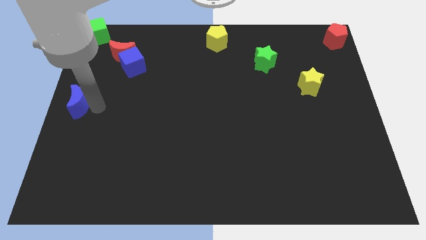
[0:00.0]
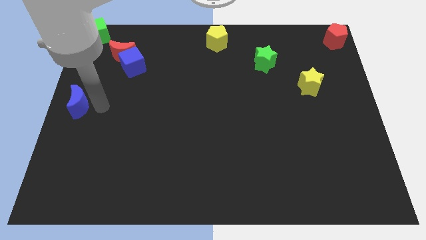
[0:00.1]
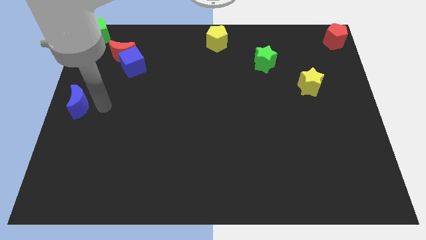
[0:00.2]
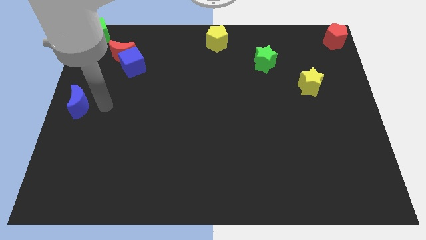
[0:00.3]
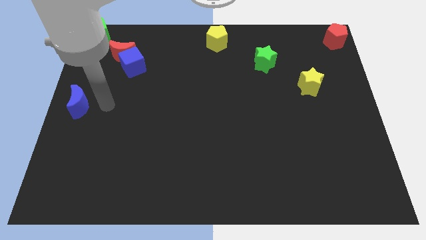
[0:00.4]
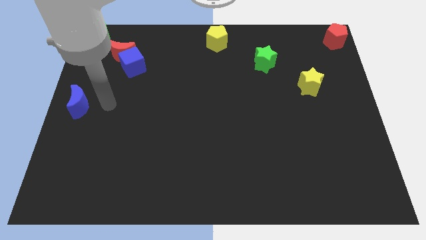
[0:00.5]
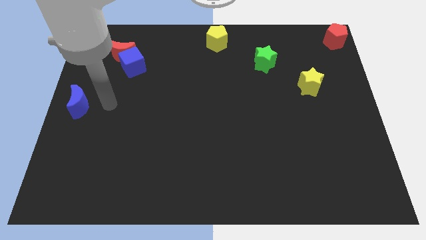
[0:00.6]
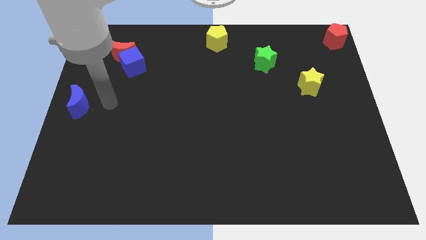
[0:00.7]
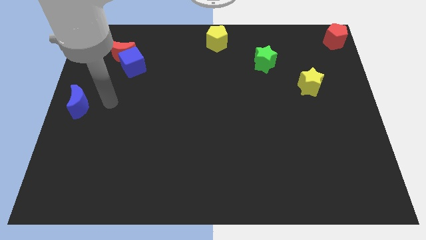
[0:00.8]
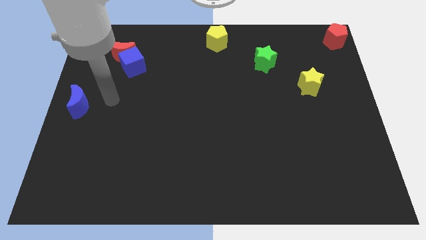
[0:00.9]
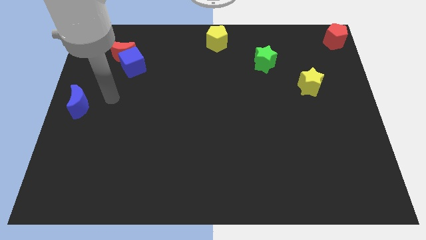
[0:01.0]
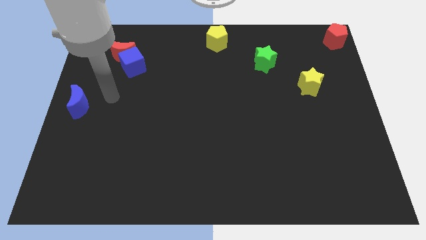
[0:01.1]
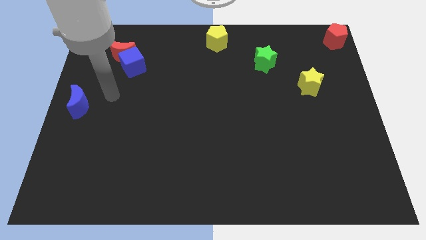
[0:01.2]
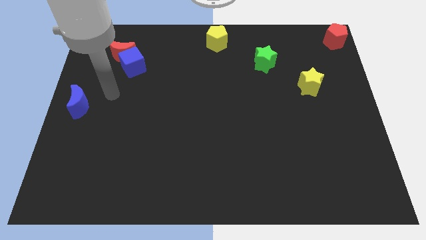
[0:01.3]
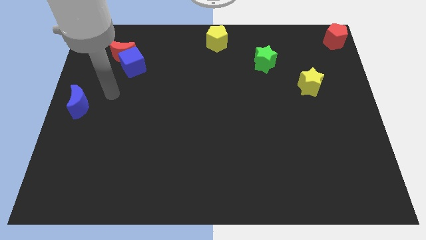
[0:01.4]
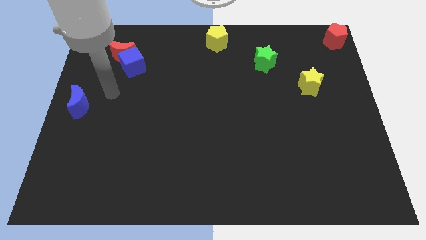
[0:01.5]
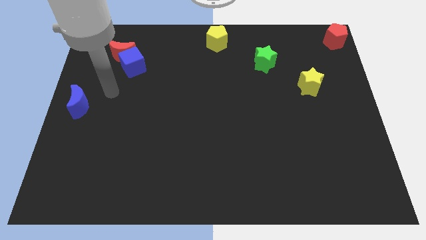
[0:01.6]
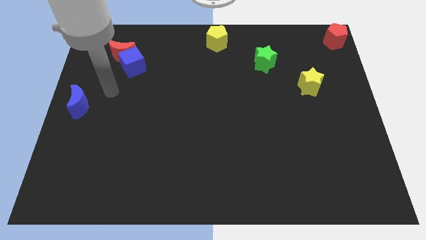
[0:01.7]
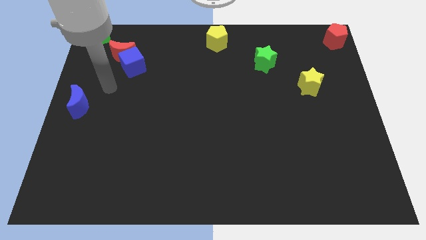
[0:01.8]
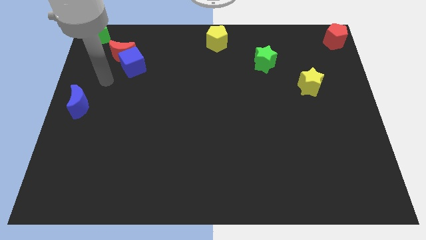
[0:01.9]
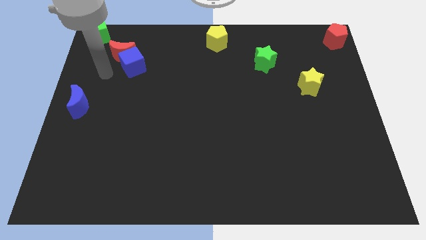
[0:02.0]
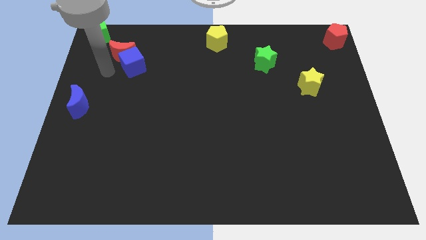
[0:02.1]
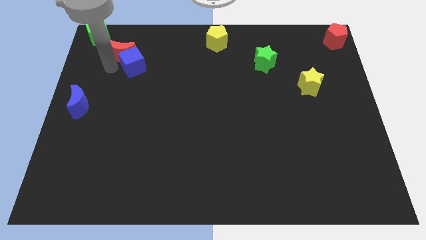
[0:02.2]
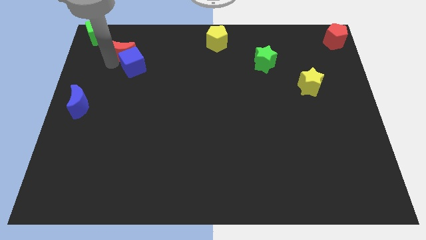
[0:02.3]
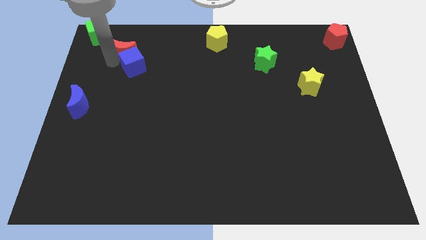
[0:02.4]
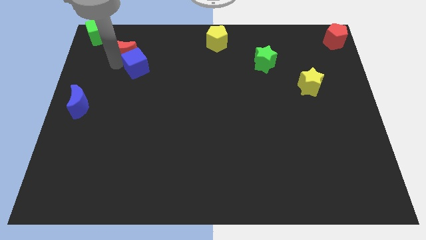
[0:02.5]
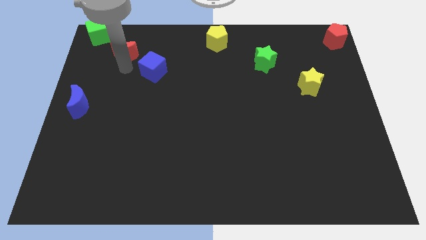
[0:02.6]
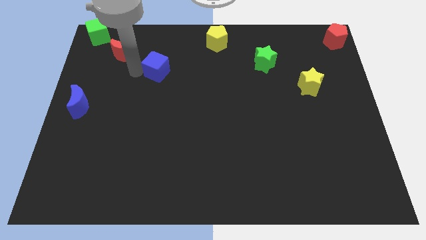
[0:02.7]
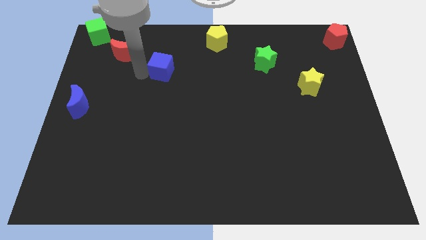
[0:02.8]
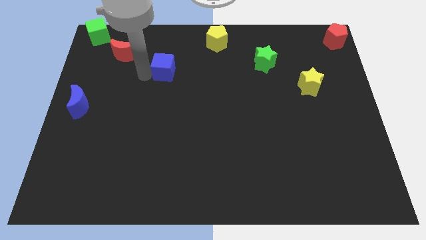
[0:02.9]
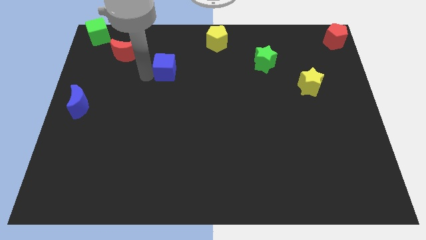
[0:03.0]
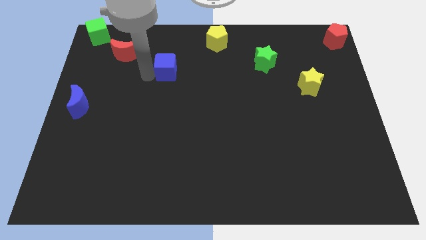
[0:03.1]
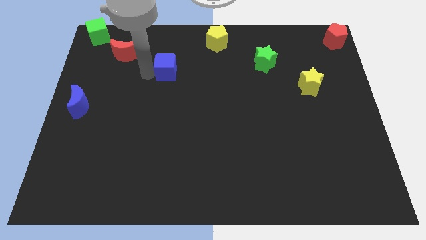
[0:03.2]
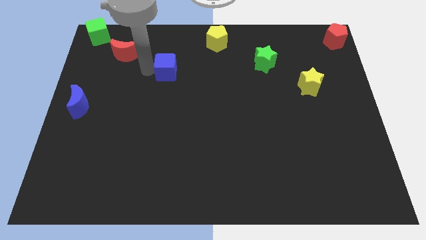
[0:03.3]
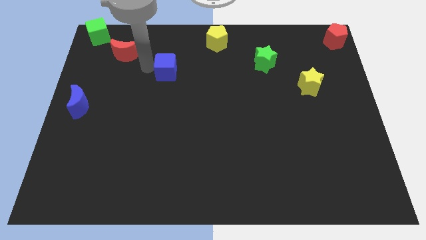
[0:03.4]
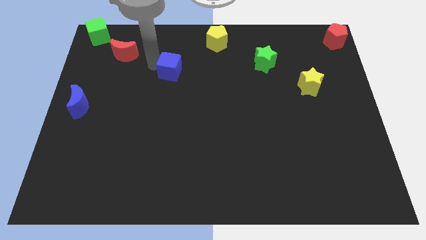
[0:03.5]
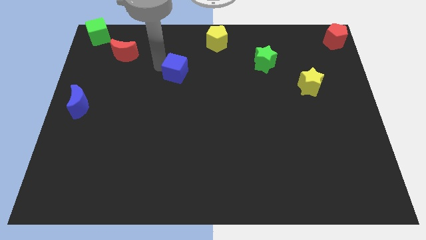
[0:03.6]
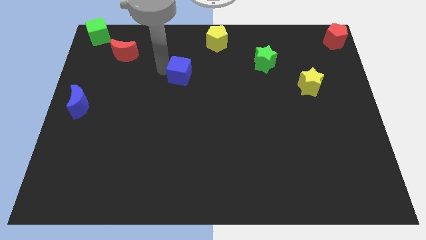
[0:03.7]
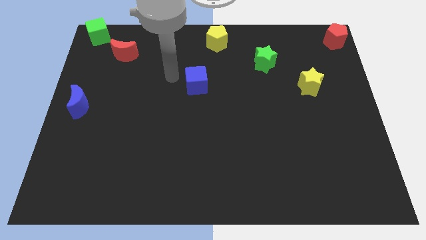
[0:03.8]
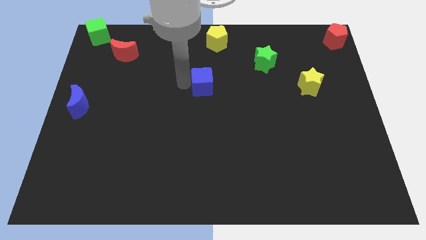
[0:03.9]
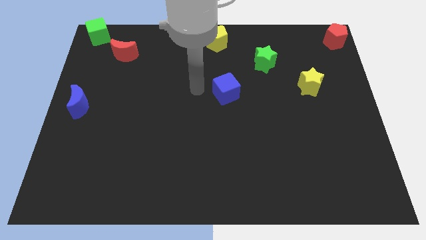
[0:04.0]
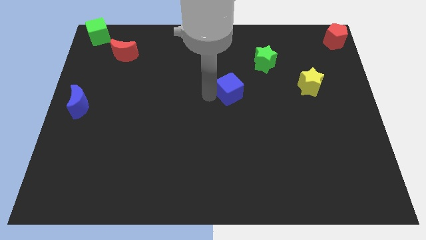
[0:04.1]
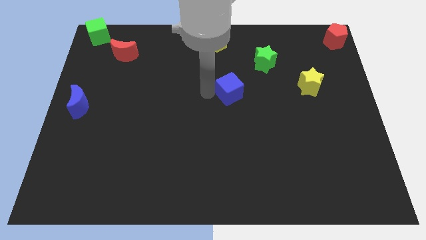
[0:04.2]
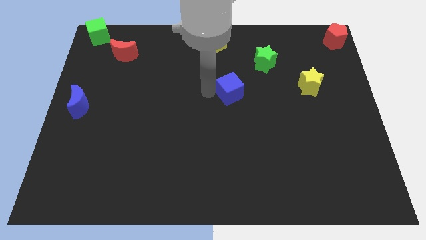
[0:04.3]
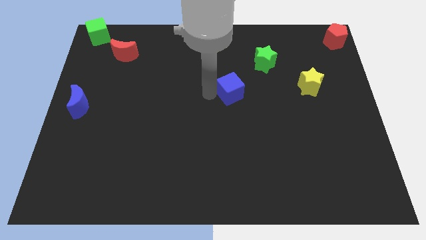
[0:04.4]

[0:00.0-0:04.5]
move the blue cube daigonally to the green star

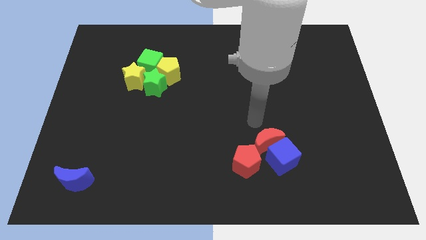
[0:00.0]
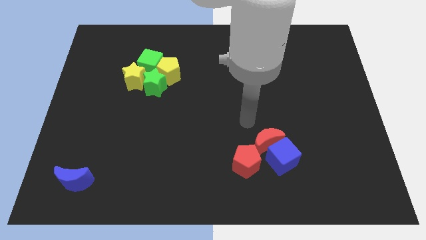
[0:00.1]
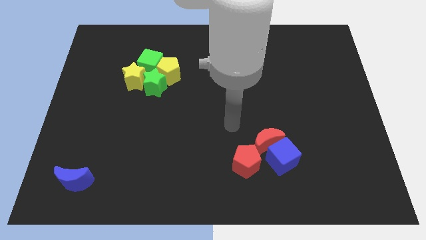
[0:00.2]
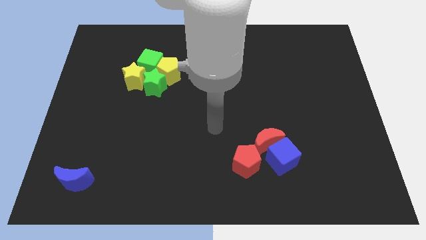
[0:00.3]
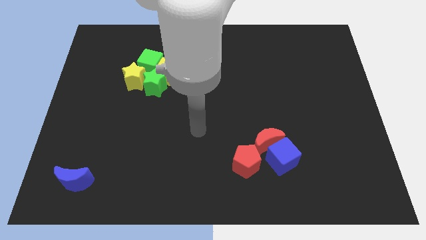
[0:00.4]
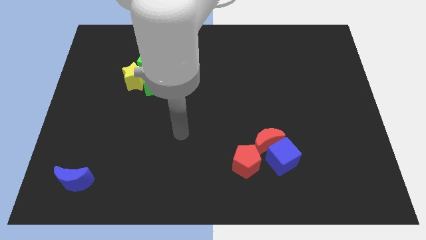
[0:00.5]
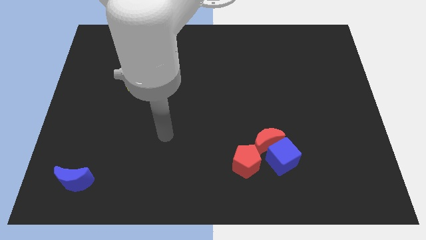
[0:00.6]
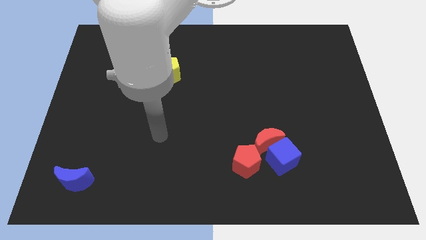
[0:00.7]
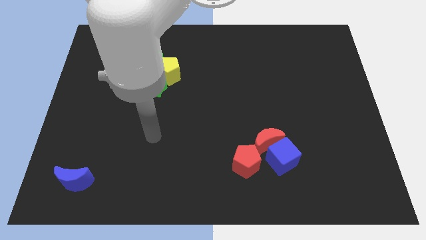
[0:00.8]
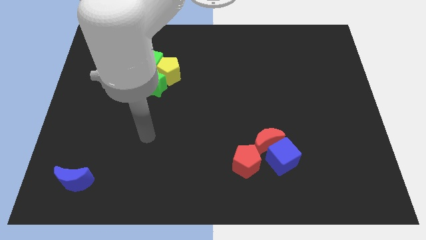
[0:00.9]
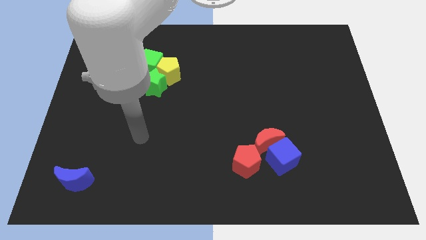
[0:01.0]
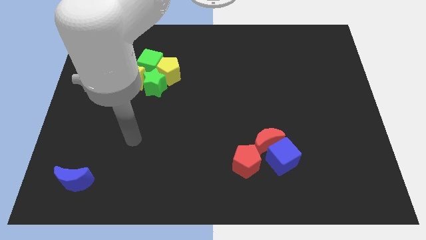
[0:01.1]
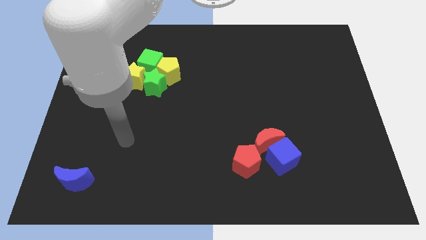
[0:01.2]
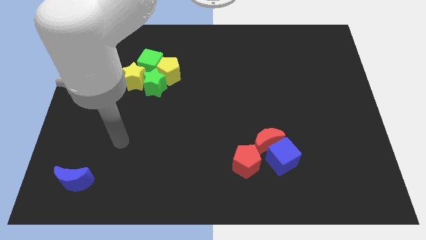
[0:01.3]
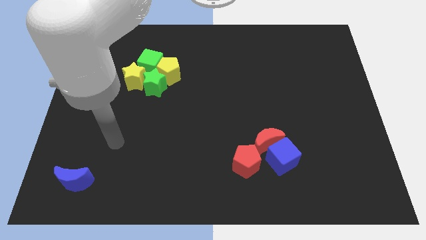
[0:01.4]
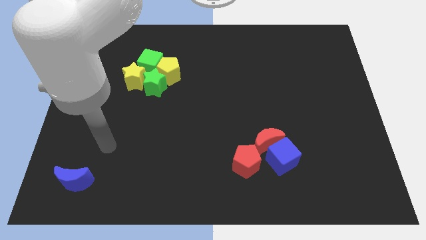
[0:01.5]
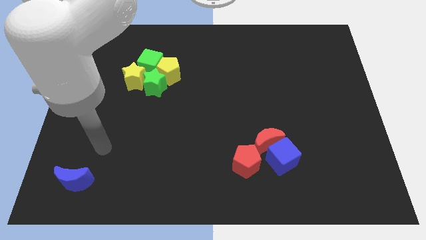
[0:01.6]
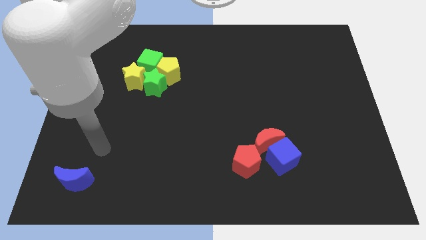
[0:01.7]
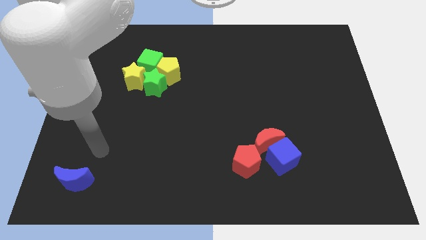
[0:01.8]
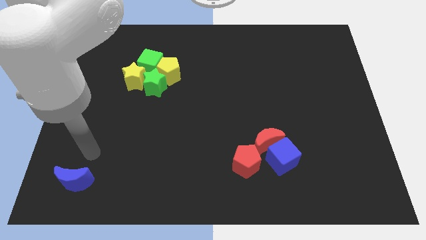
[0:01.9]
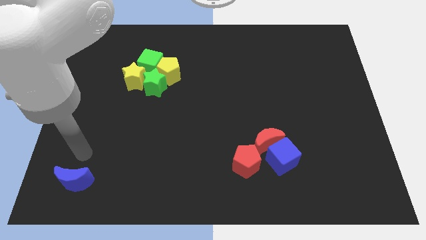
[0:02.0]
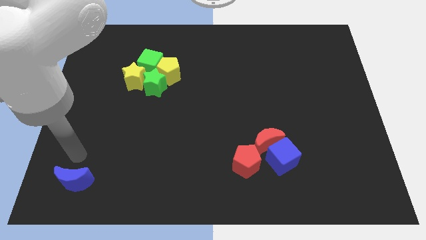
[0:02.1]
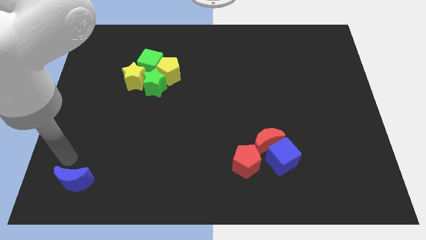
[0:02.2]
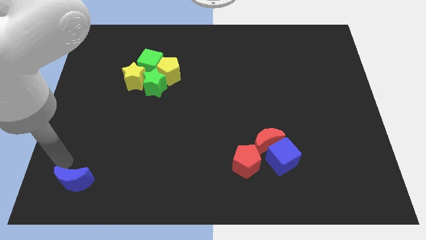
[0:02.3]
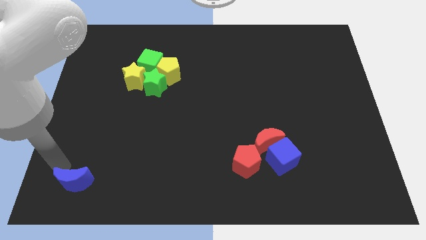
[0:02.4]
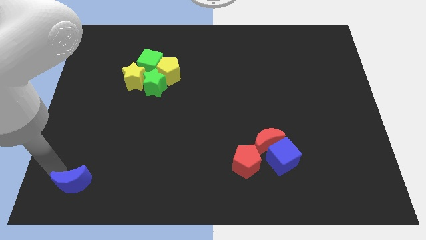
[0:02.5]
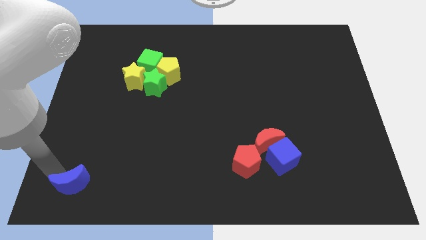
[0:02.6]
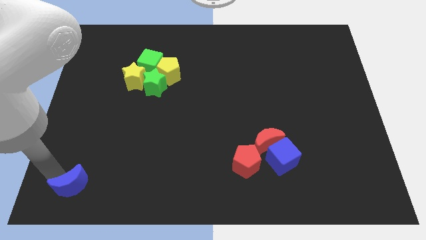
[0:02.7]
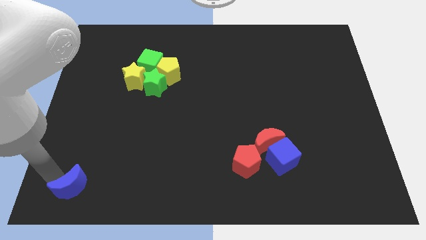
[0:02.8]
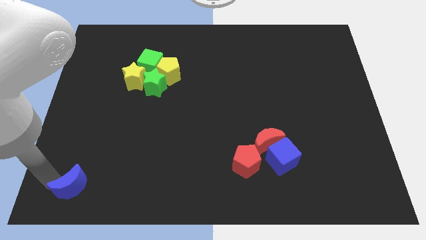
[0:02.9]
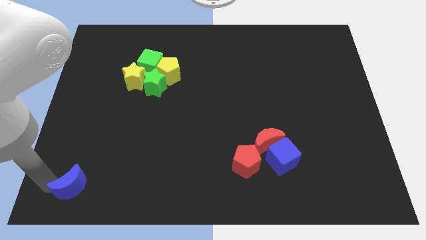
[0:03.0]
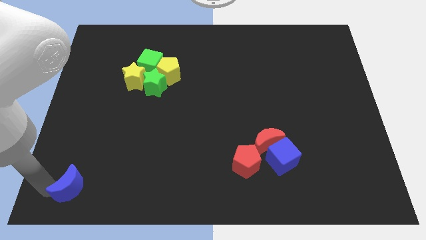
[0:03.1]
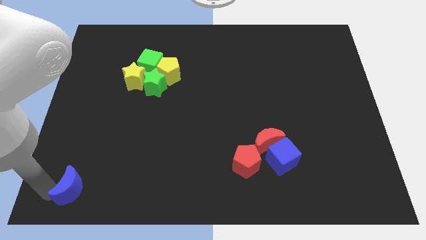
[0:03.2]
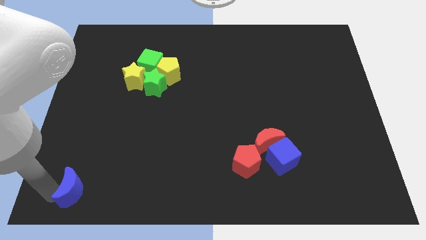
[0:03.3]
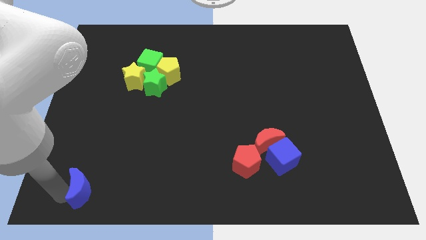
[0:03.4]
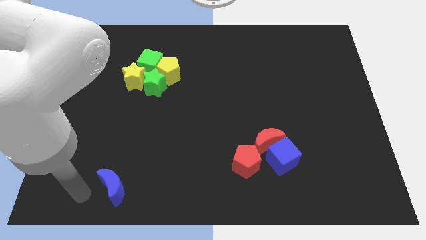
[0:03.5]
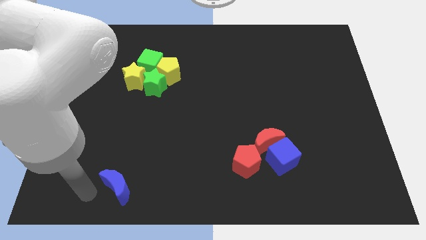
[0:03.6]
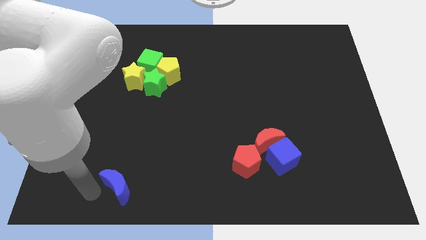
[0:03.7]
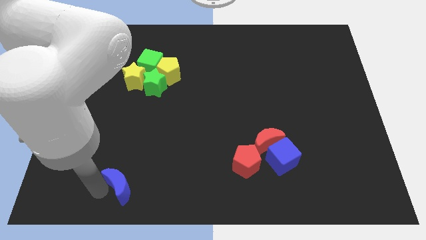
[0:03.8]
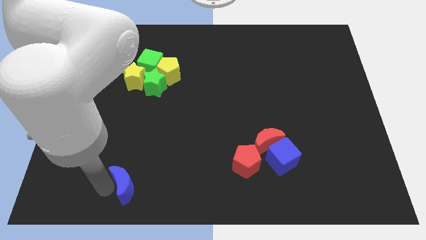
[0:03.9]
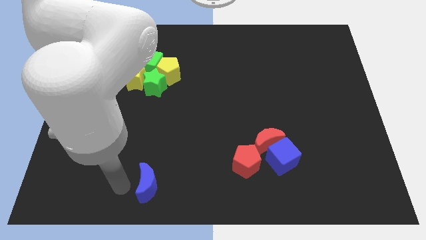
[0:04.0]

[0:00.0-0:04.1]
move the blue moon towards the bottom center

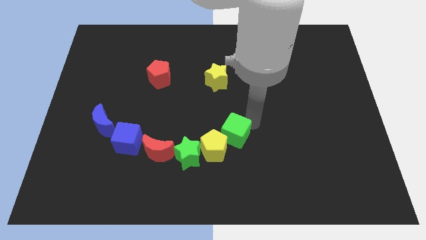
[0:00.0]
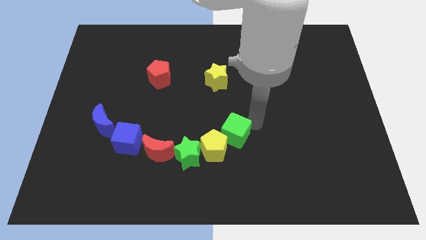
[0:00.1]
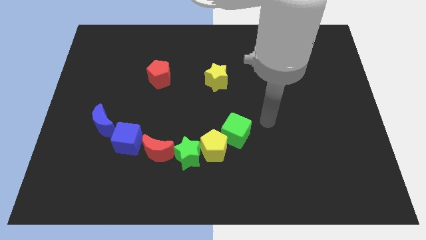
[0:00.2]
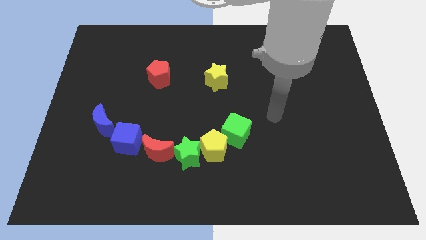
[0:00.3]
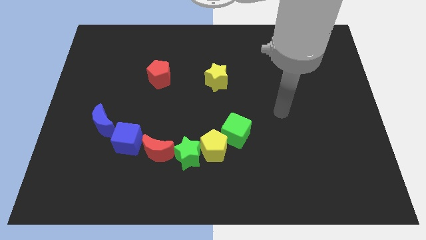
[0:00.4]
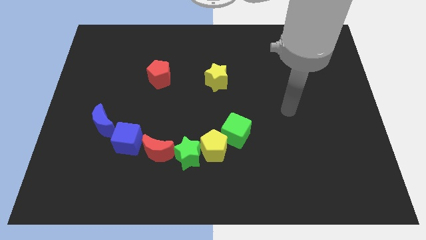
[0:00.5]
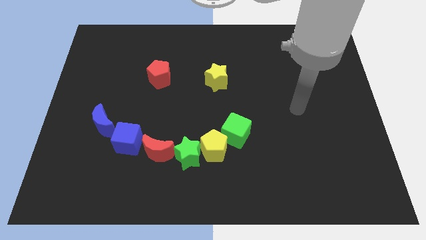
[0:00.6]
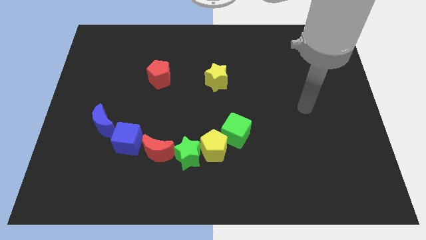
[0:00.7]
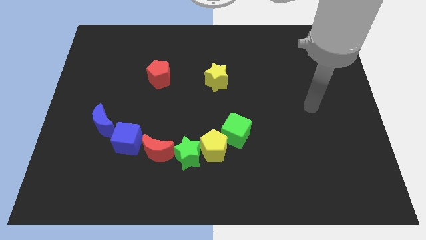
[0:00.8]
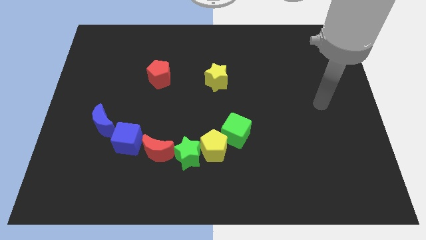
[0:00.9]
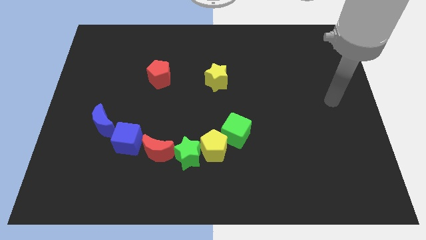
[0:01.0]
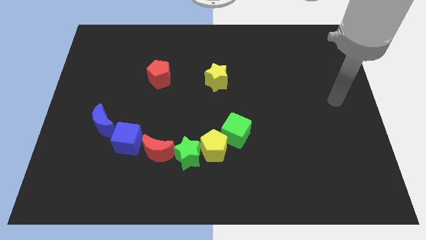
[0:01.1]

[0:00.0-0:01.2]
move your arm towards the right side of the board
